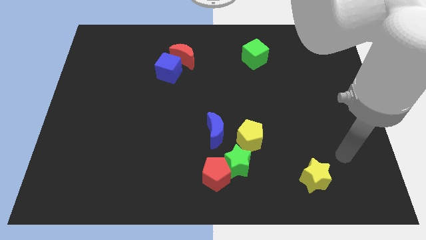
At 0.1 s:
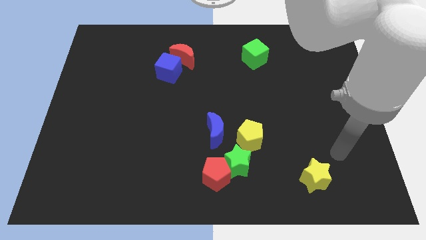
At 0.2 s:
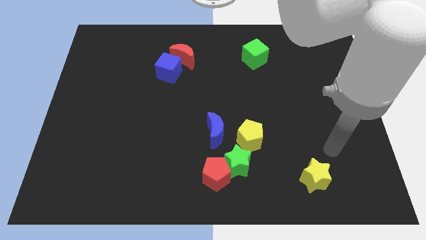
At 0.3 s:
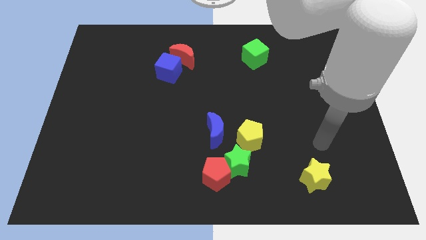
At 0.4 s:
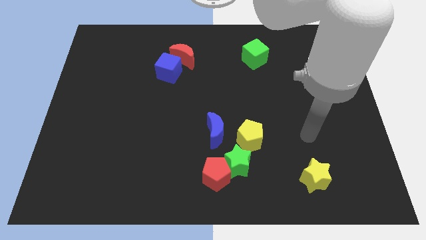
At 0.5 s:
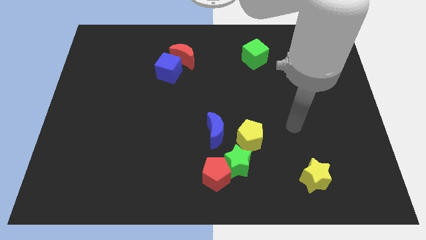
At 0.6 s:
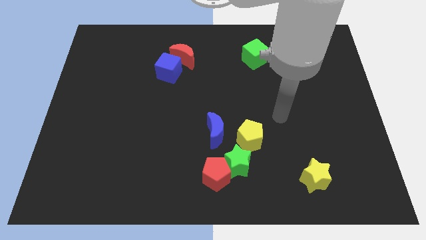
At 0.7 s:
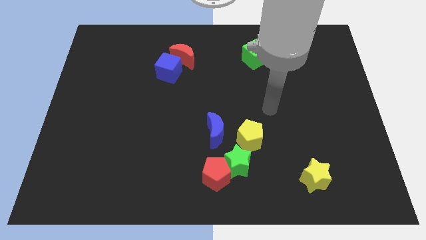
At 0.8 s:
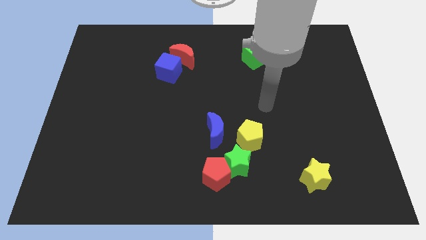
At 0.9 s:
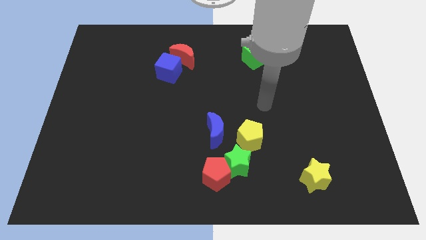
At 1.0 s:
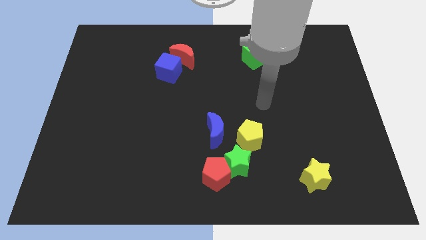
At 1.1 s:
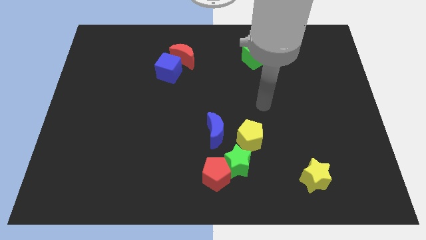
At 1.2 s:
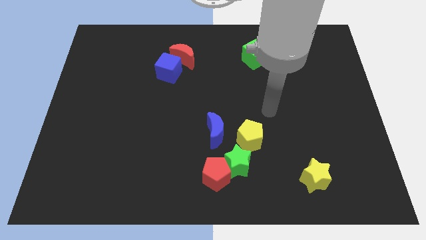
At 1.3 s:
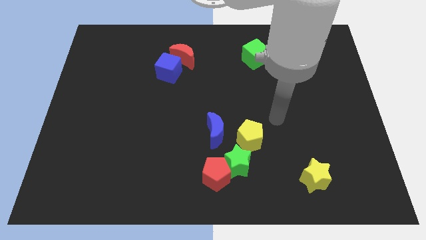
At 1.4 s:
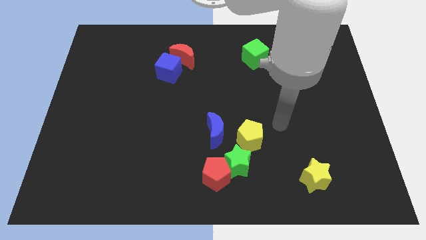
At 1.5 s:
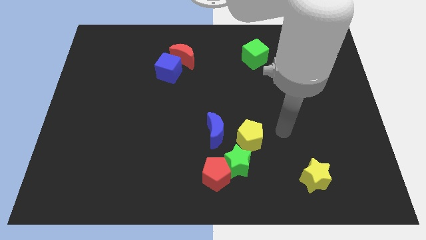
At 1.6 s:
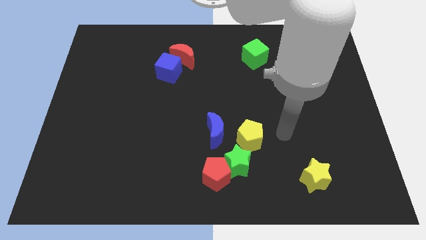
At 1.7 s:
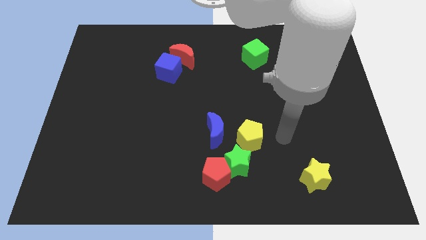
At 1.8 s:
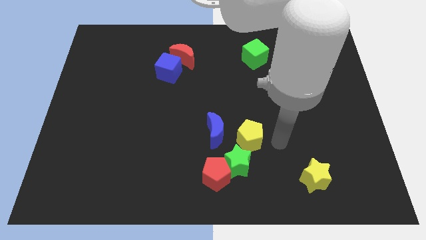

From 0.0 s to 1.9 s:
point your arm towards yellow pentagon

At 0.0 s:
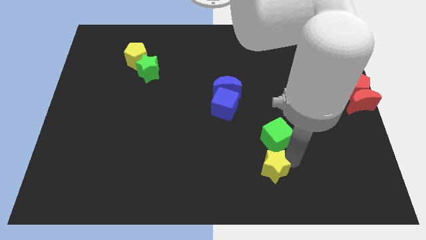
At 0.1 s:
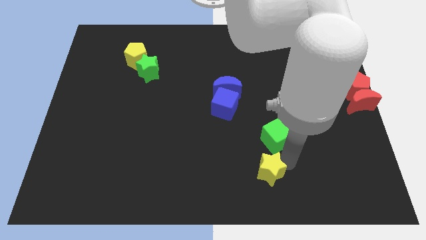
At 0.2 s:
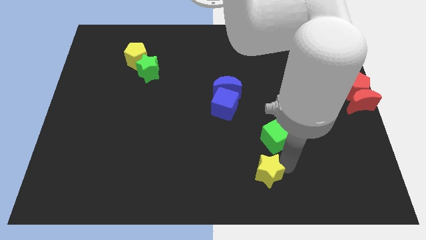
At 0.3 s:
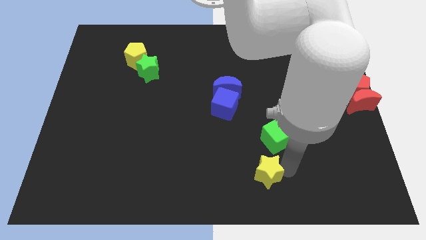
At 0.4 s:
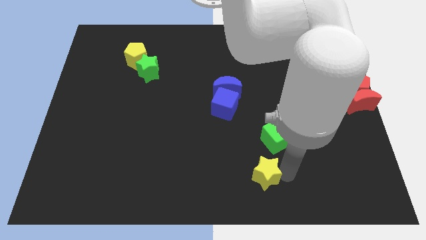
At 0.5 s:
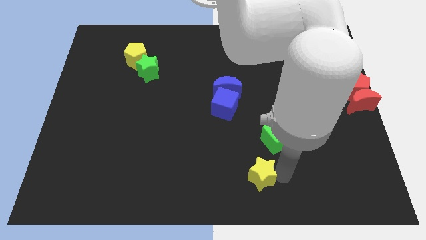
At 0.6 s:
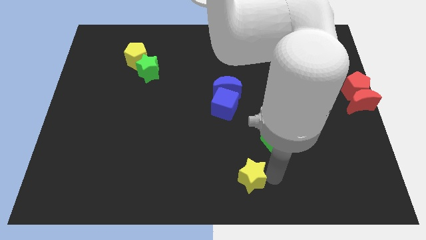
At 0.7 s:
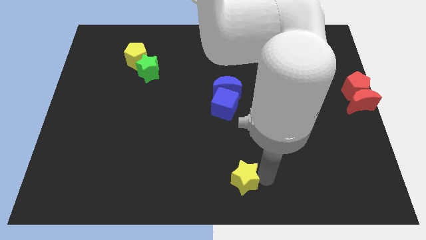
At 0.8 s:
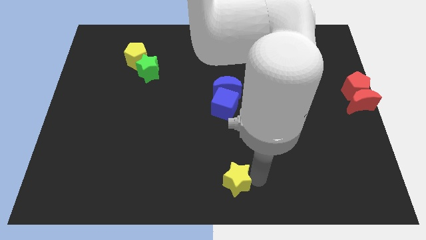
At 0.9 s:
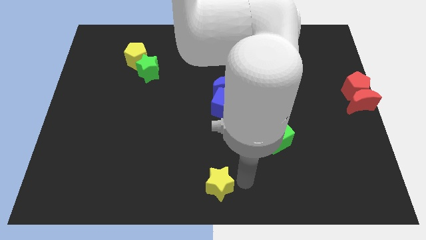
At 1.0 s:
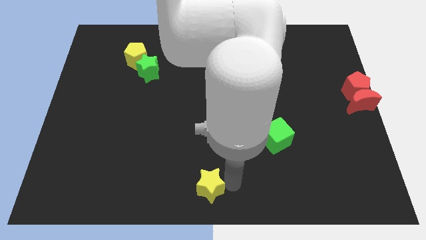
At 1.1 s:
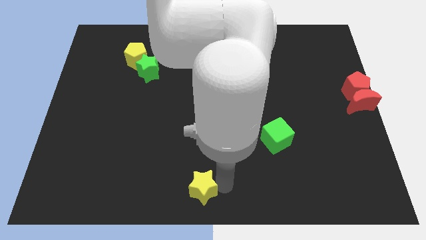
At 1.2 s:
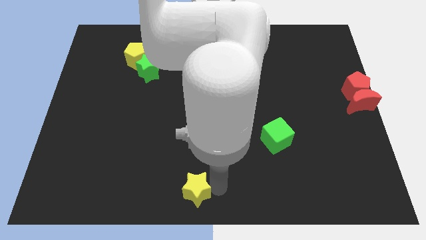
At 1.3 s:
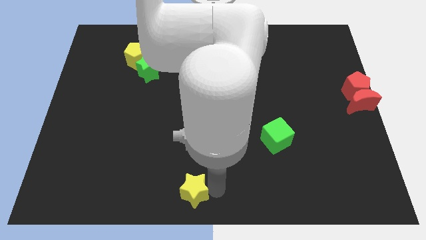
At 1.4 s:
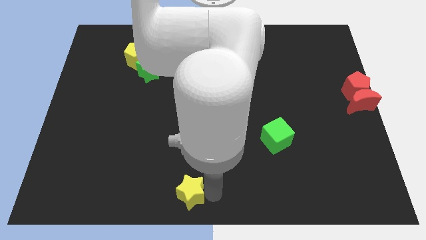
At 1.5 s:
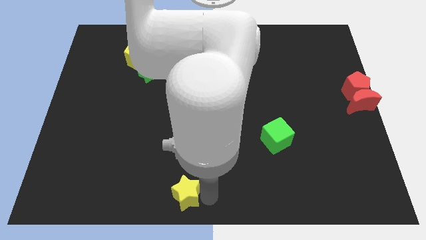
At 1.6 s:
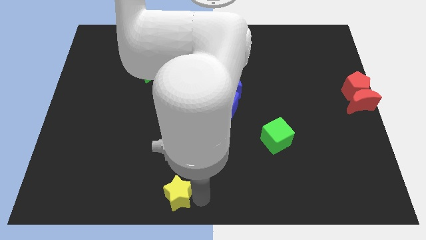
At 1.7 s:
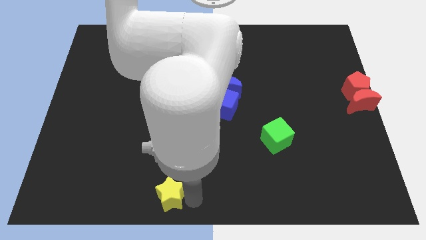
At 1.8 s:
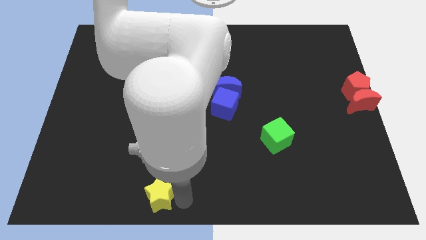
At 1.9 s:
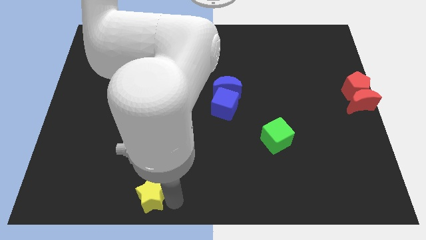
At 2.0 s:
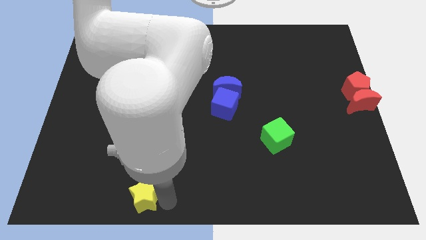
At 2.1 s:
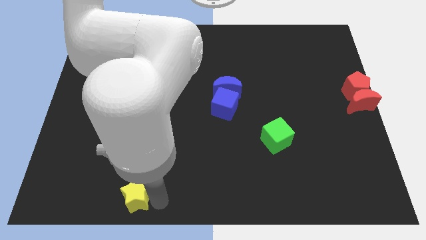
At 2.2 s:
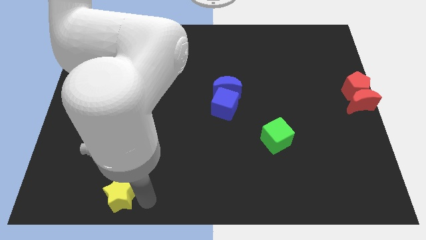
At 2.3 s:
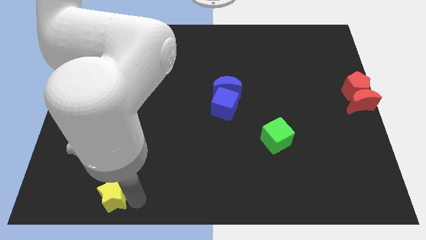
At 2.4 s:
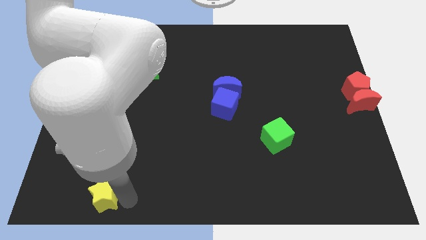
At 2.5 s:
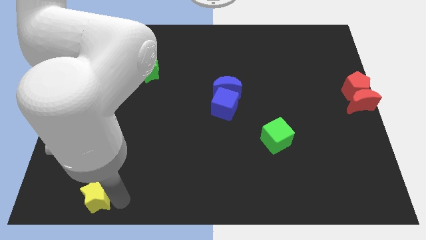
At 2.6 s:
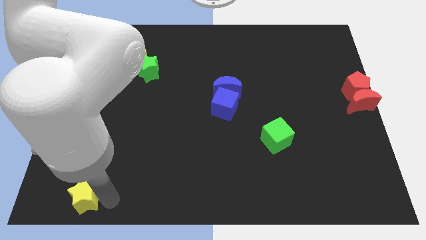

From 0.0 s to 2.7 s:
push the yellow star towards the bottom left corner of the board

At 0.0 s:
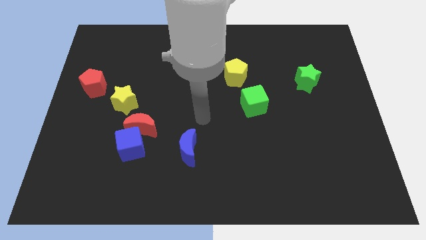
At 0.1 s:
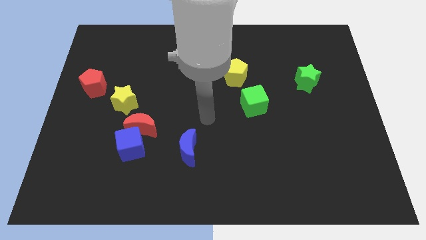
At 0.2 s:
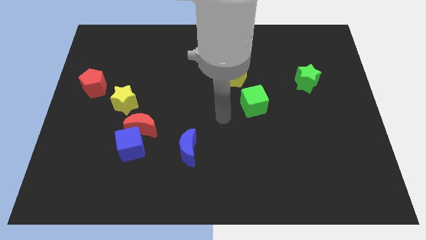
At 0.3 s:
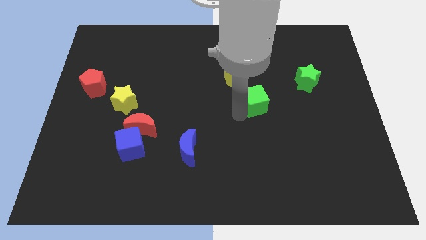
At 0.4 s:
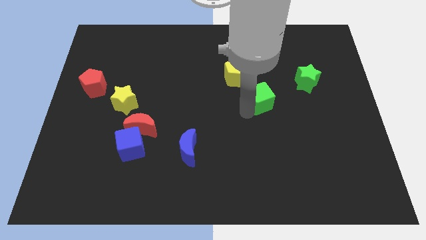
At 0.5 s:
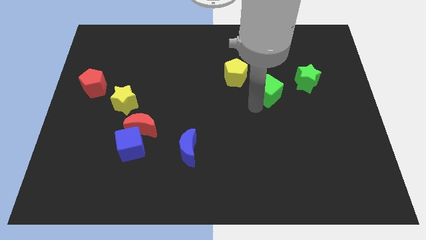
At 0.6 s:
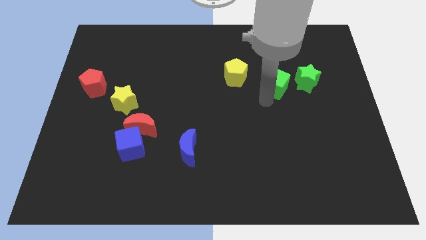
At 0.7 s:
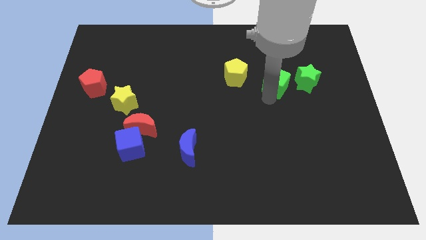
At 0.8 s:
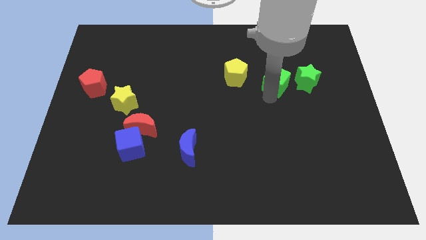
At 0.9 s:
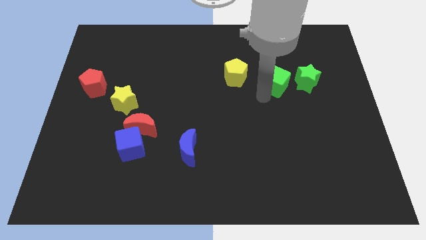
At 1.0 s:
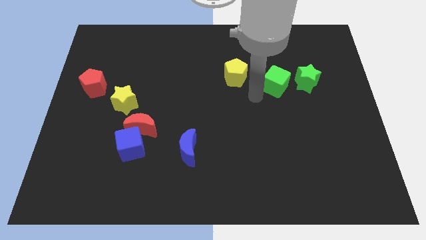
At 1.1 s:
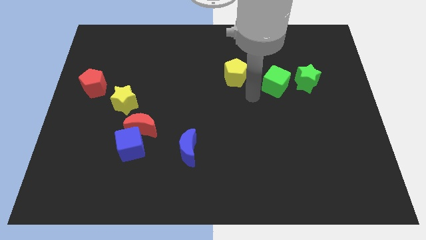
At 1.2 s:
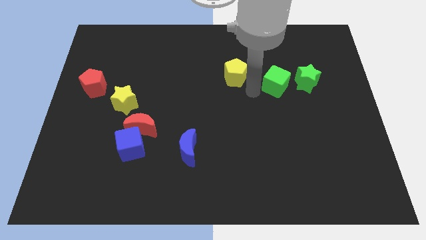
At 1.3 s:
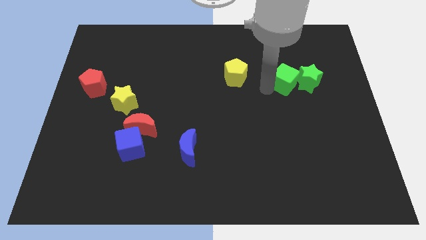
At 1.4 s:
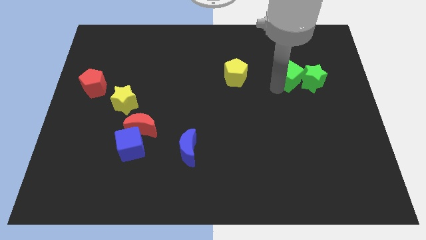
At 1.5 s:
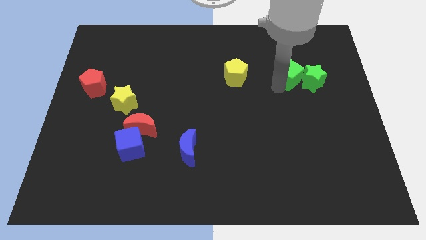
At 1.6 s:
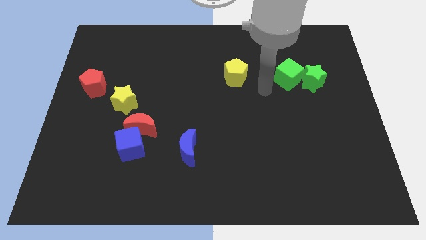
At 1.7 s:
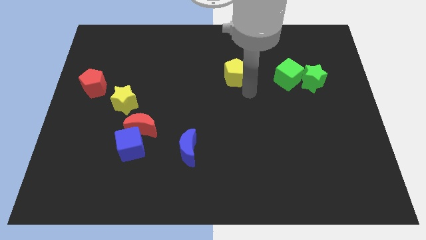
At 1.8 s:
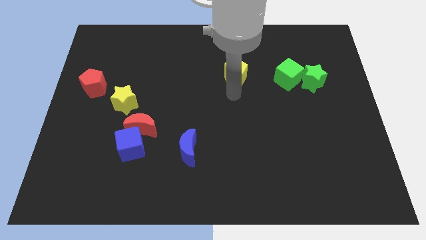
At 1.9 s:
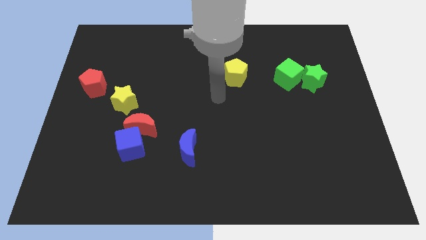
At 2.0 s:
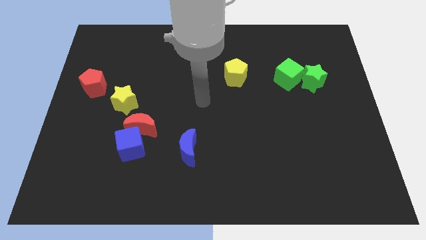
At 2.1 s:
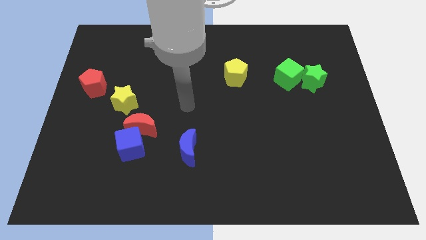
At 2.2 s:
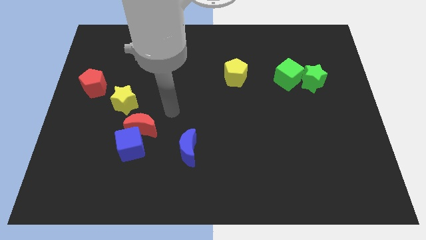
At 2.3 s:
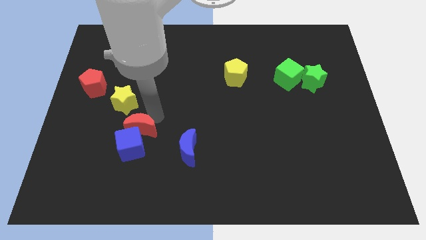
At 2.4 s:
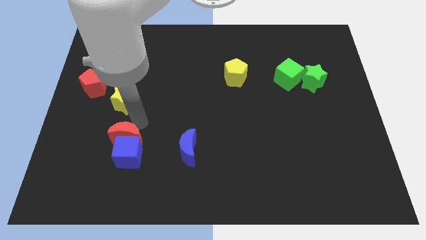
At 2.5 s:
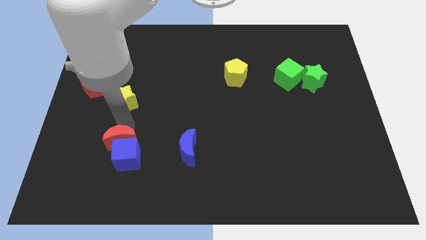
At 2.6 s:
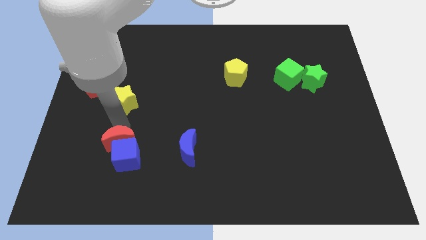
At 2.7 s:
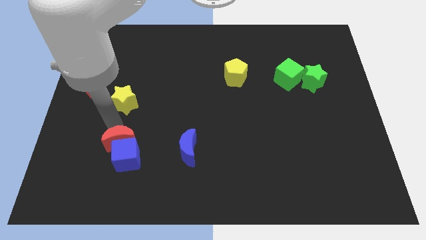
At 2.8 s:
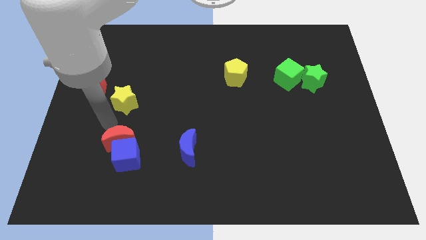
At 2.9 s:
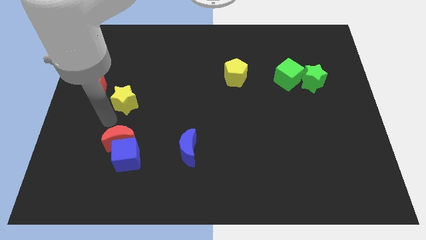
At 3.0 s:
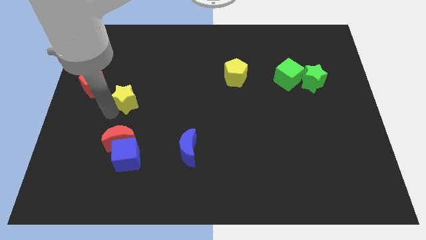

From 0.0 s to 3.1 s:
move green cube into green star

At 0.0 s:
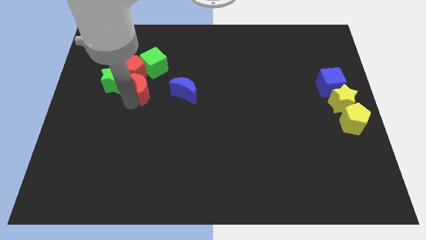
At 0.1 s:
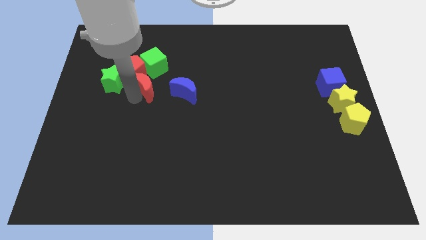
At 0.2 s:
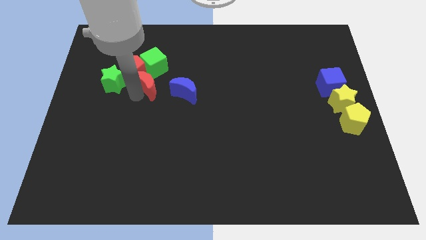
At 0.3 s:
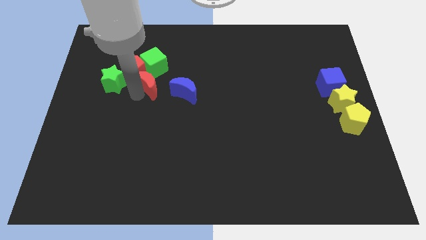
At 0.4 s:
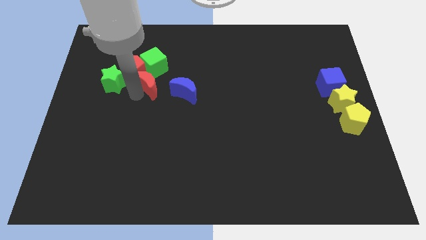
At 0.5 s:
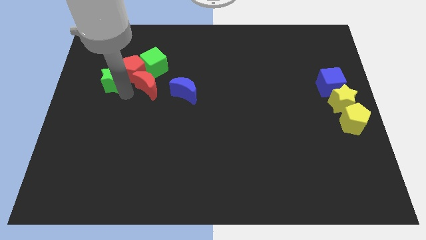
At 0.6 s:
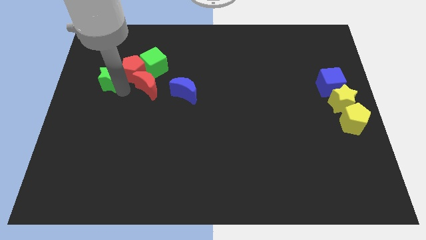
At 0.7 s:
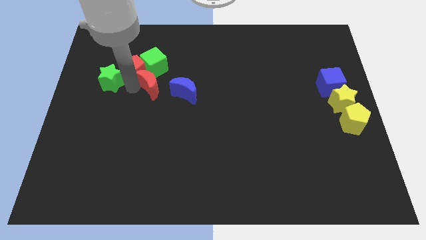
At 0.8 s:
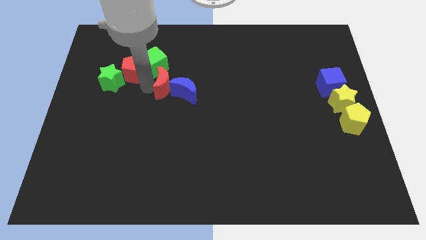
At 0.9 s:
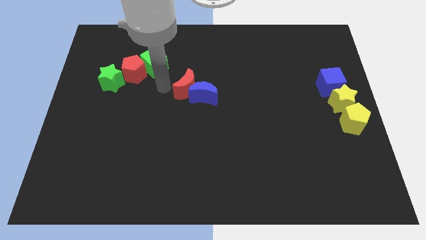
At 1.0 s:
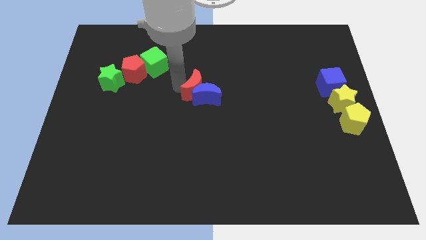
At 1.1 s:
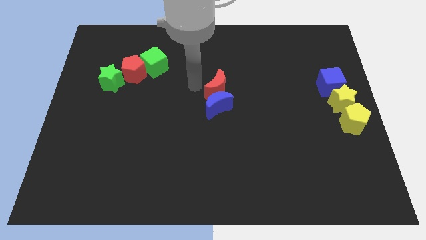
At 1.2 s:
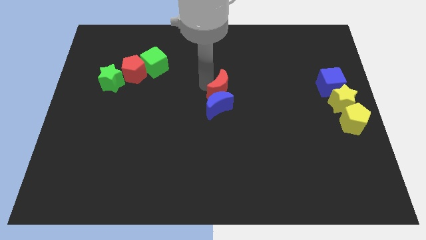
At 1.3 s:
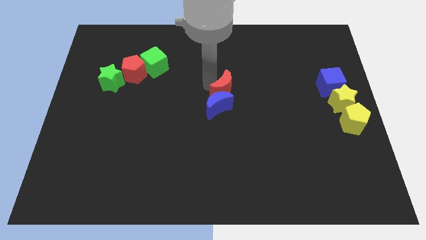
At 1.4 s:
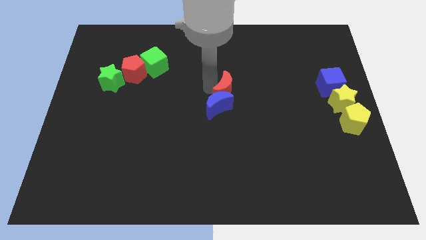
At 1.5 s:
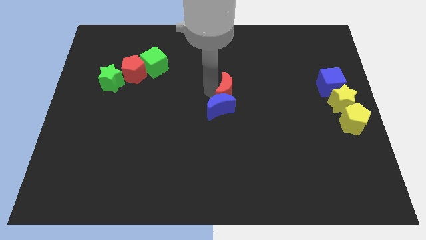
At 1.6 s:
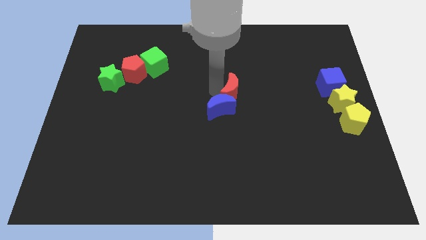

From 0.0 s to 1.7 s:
push red moon into the blue moon
